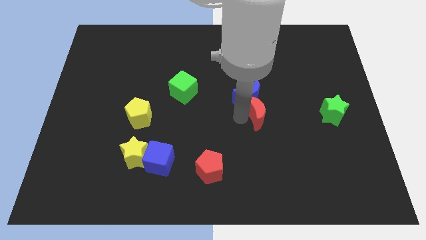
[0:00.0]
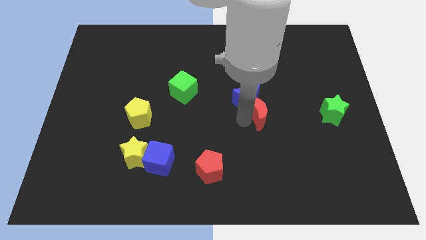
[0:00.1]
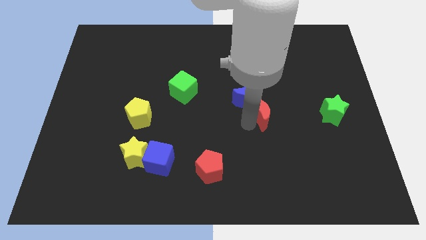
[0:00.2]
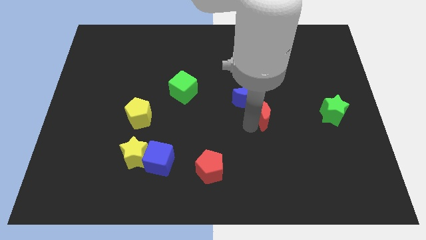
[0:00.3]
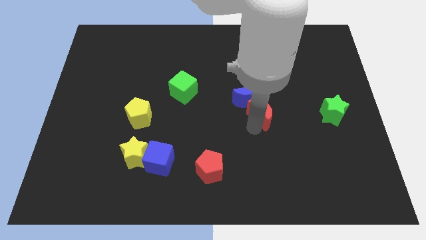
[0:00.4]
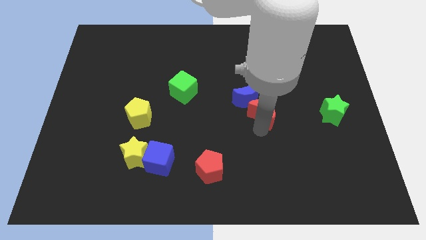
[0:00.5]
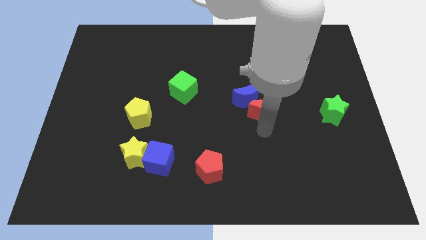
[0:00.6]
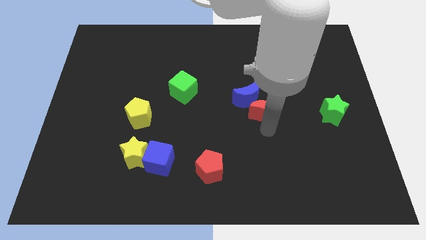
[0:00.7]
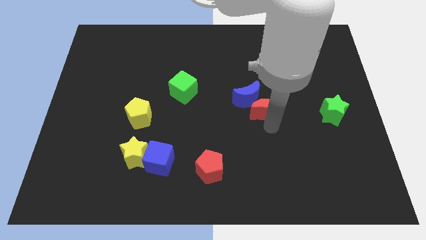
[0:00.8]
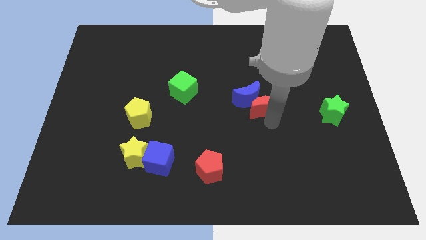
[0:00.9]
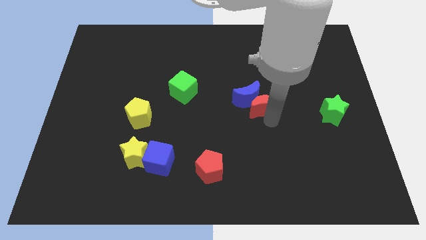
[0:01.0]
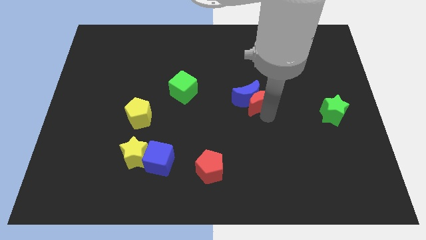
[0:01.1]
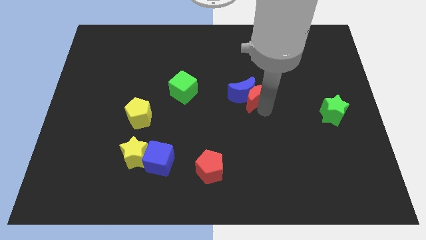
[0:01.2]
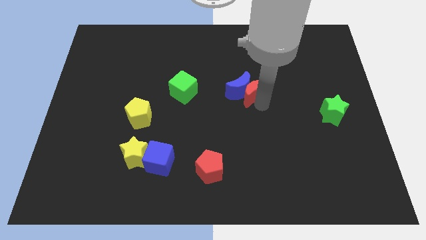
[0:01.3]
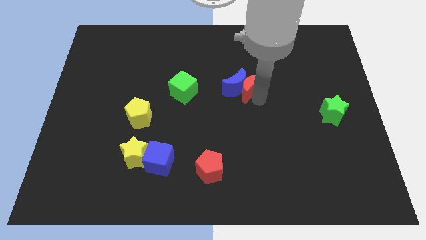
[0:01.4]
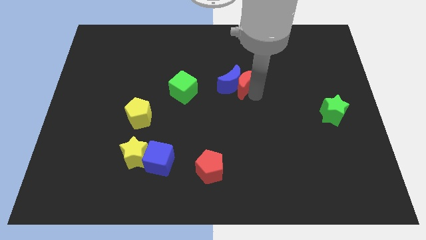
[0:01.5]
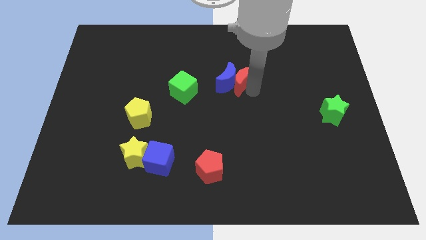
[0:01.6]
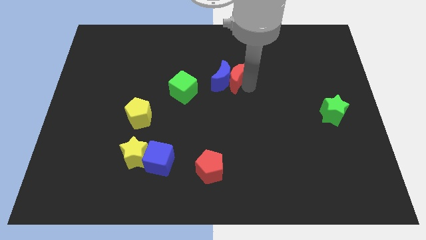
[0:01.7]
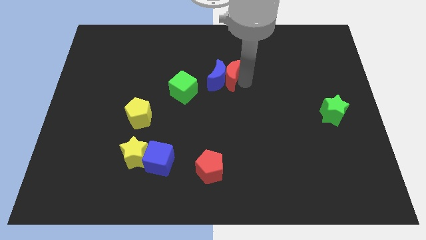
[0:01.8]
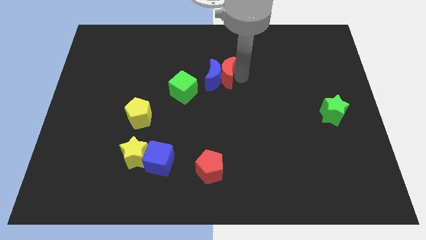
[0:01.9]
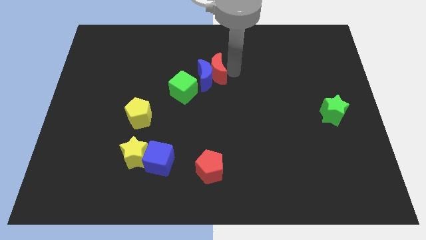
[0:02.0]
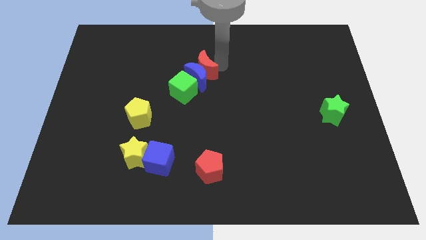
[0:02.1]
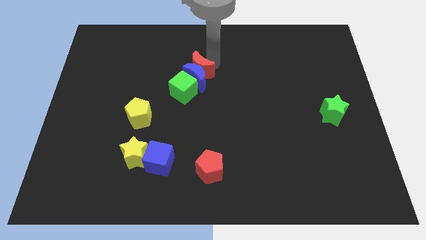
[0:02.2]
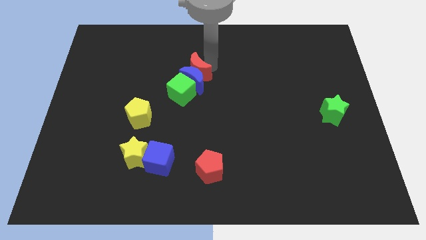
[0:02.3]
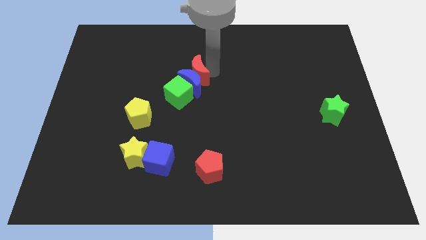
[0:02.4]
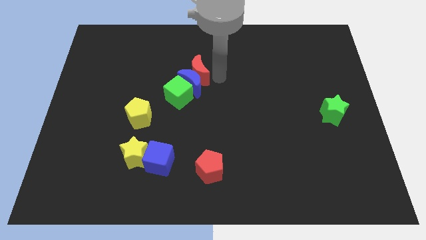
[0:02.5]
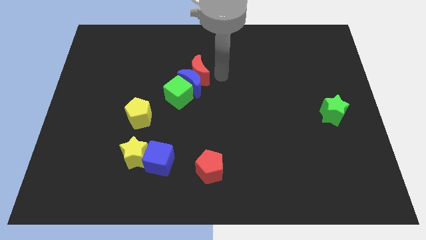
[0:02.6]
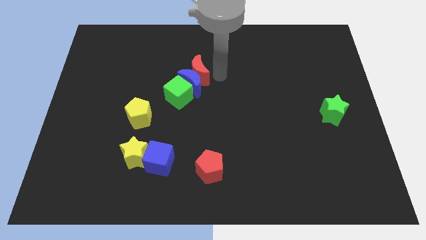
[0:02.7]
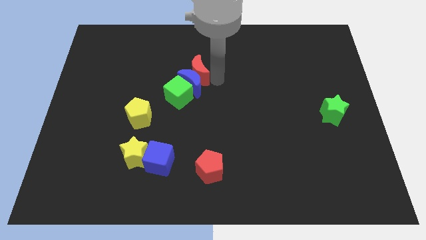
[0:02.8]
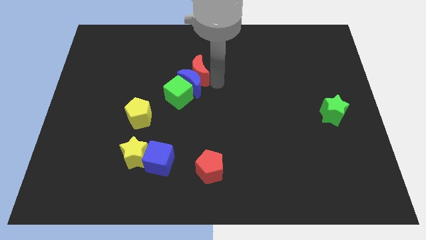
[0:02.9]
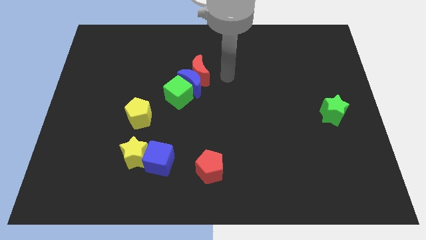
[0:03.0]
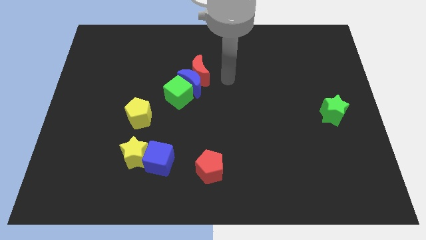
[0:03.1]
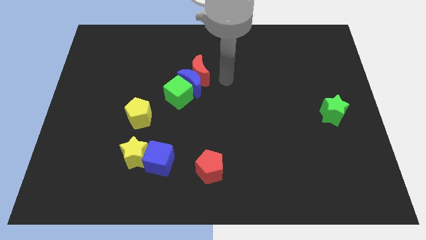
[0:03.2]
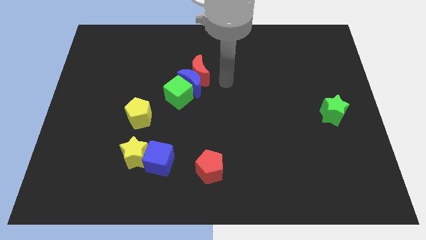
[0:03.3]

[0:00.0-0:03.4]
bring the blue crescent and red crescent above the green cube

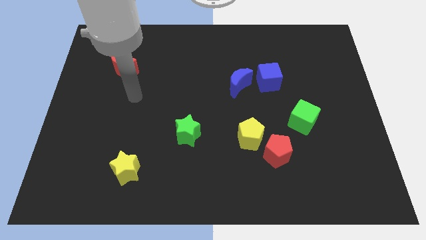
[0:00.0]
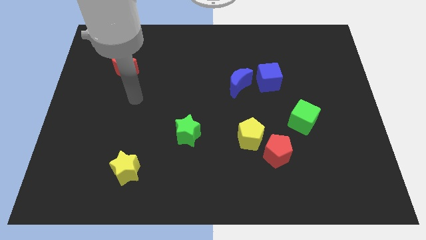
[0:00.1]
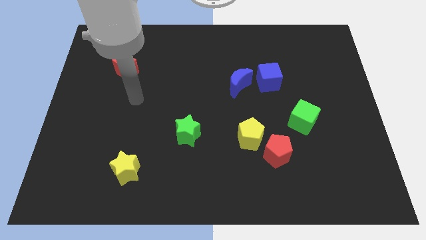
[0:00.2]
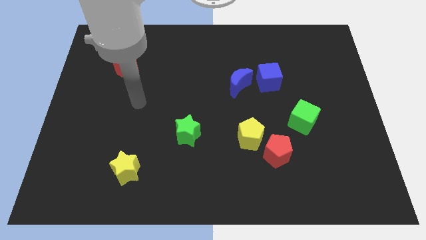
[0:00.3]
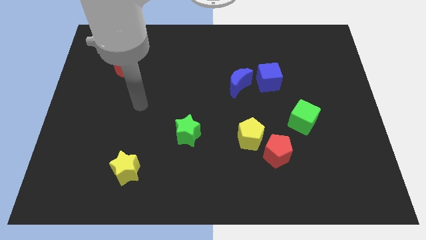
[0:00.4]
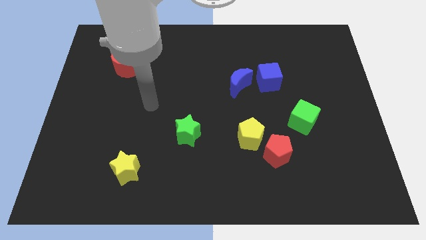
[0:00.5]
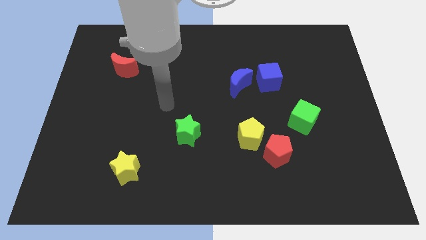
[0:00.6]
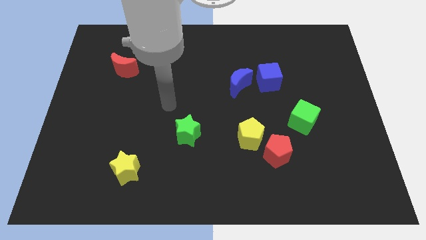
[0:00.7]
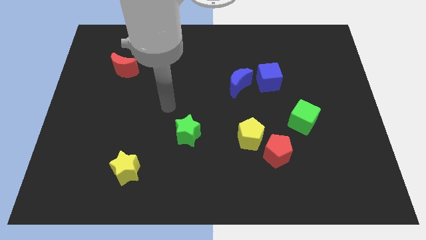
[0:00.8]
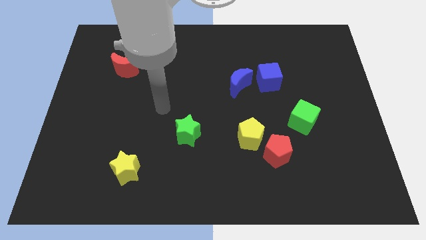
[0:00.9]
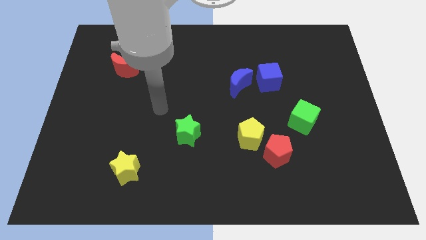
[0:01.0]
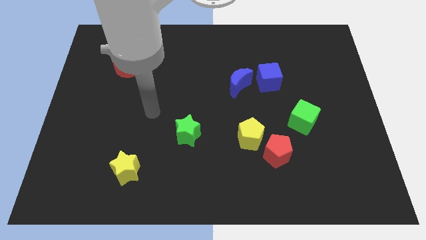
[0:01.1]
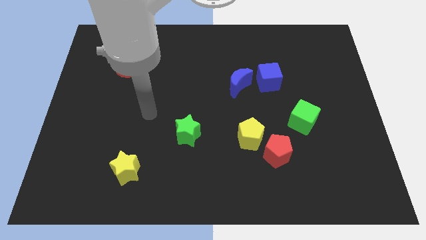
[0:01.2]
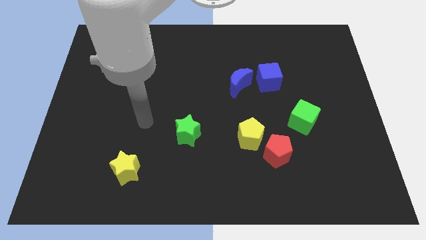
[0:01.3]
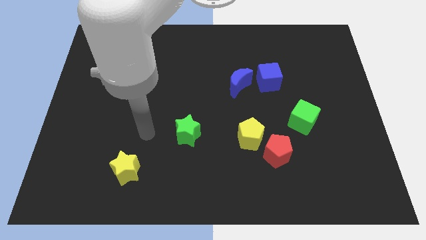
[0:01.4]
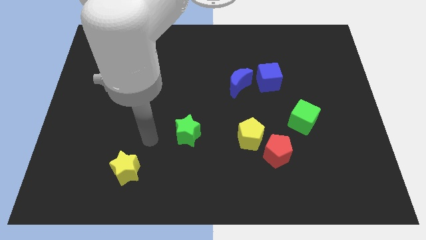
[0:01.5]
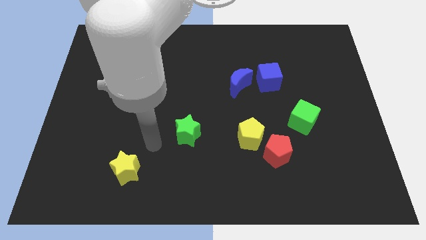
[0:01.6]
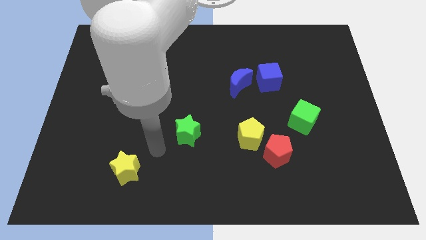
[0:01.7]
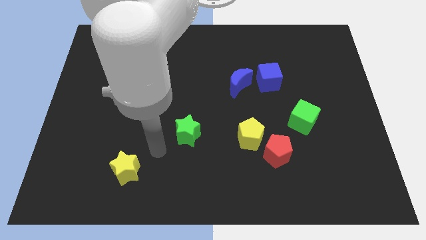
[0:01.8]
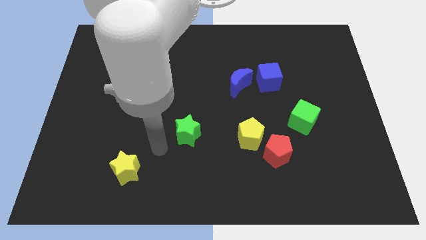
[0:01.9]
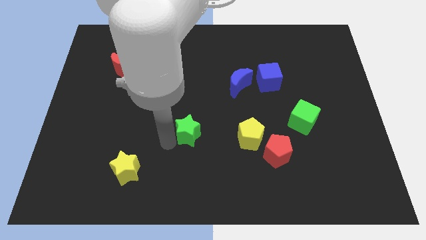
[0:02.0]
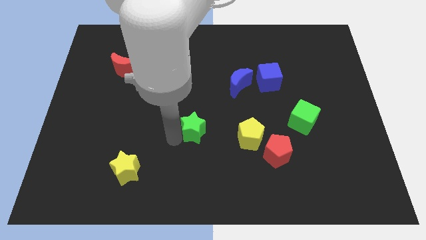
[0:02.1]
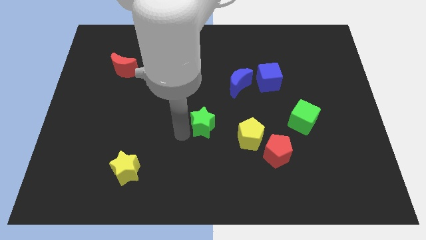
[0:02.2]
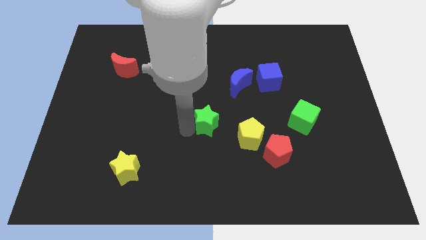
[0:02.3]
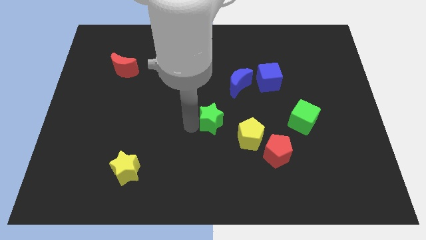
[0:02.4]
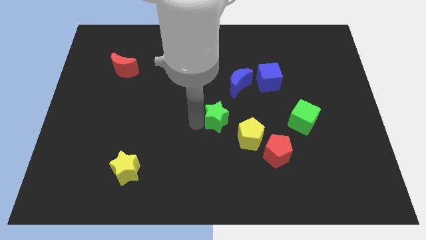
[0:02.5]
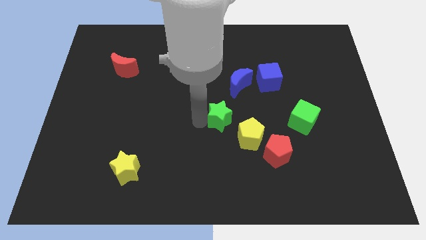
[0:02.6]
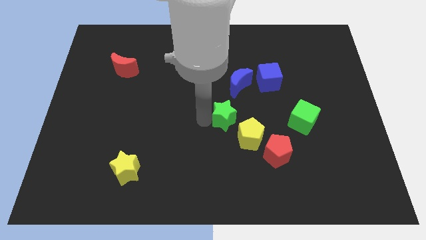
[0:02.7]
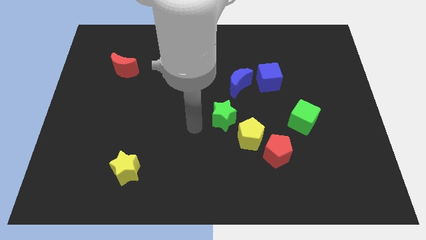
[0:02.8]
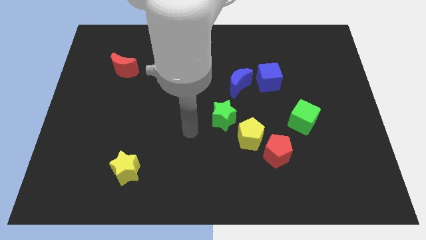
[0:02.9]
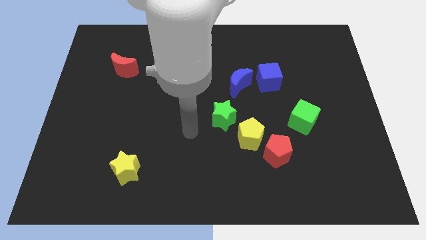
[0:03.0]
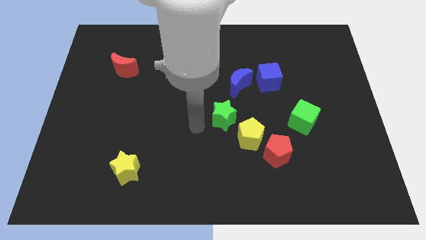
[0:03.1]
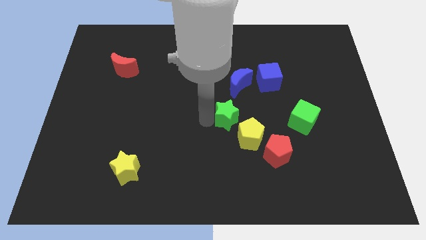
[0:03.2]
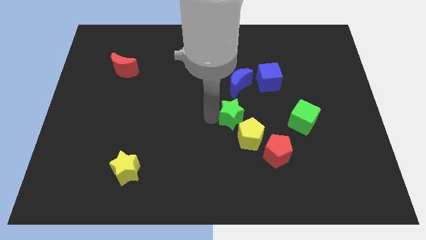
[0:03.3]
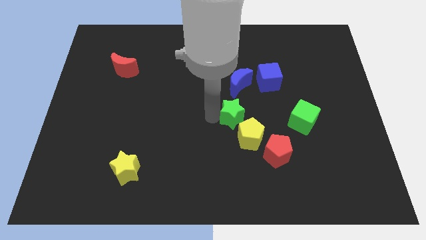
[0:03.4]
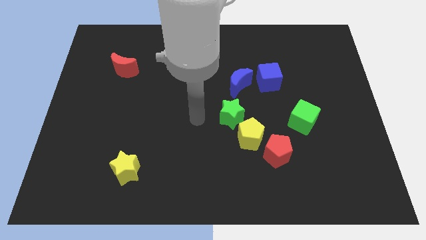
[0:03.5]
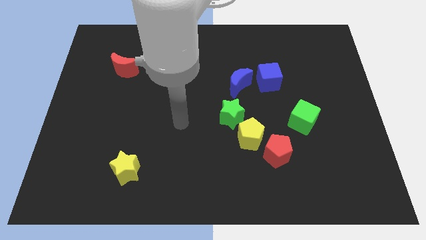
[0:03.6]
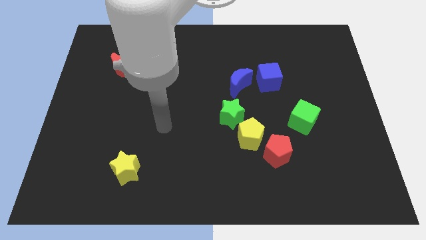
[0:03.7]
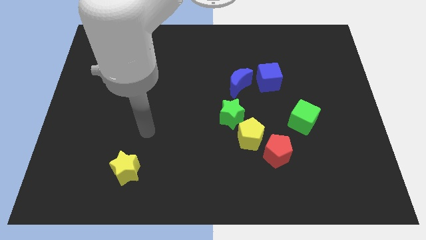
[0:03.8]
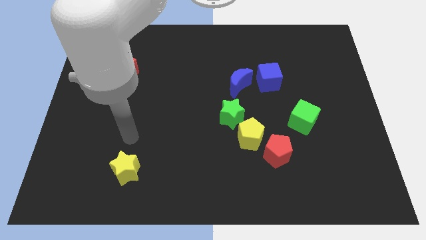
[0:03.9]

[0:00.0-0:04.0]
move the green star to the bottom side of the blue crescent

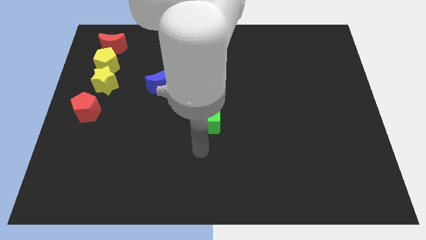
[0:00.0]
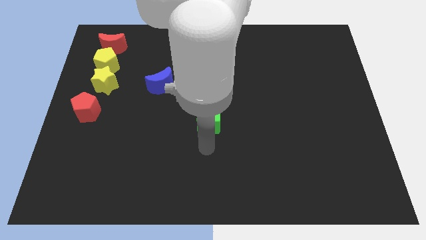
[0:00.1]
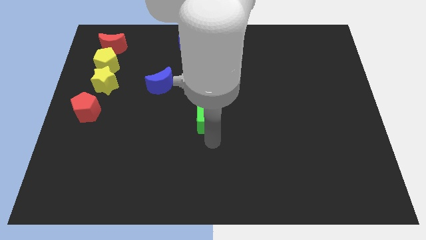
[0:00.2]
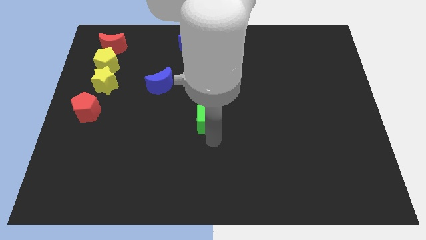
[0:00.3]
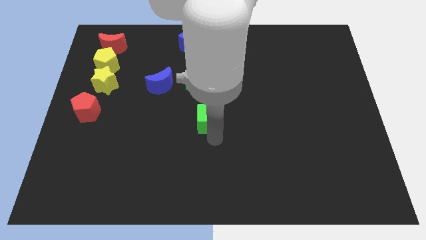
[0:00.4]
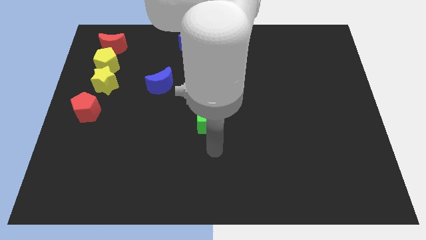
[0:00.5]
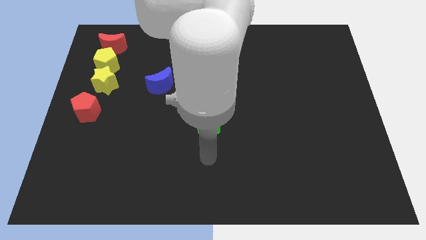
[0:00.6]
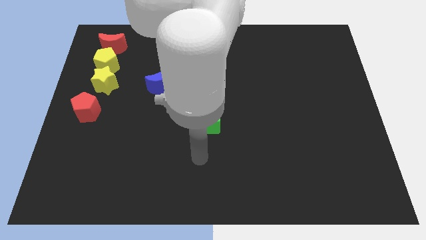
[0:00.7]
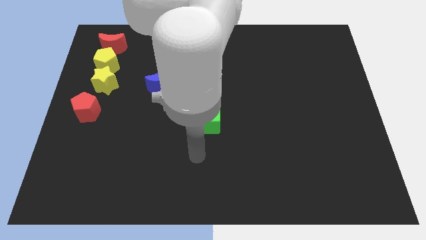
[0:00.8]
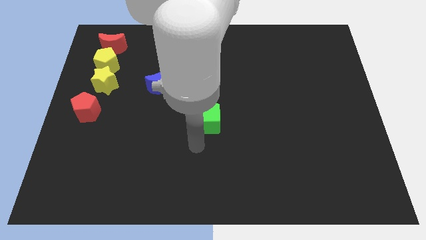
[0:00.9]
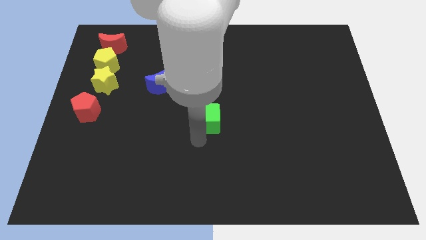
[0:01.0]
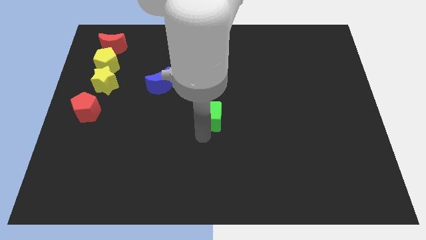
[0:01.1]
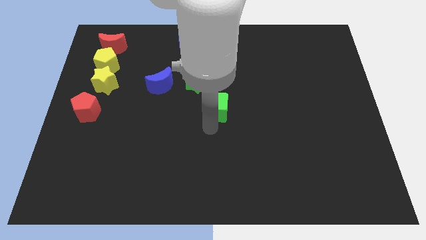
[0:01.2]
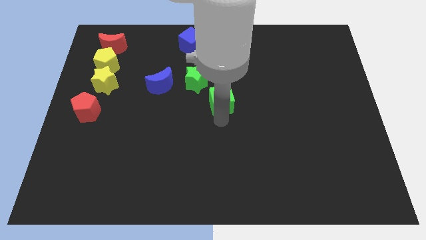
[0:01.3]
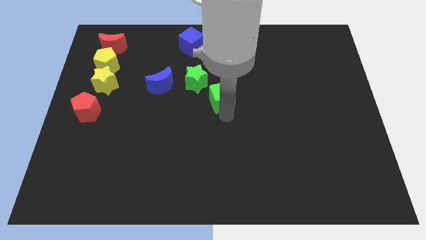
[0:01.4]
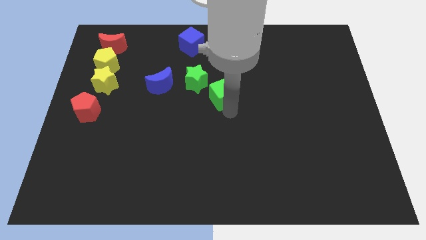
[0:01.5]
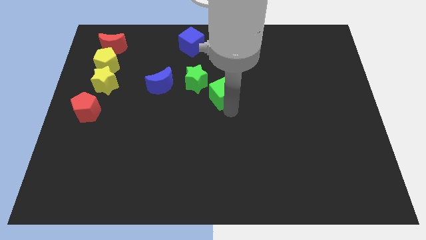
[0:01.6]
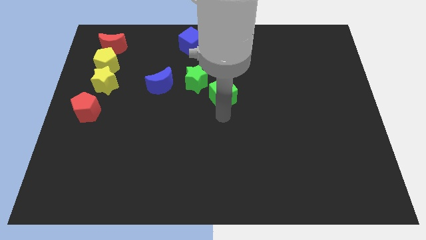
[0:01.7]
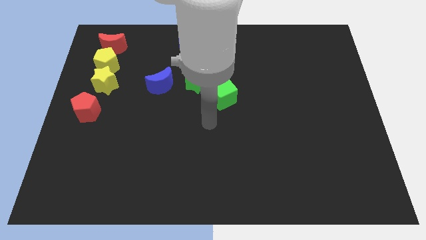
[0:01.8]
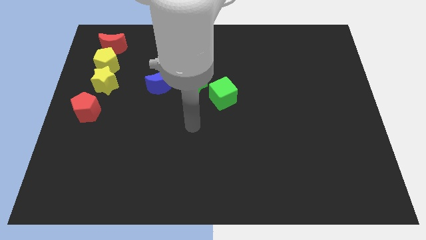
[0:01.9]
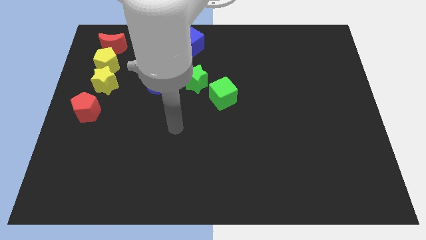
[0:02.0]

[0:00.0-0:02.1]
place the green cube to the bottom right of the green star
